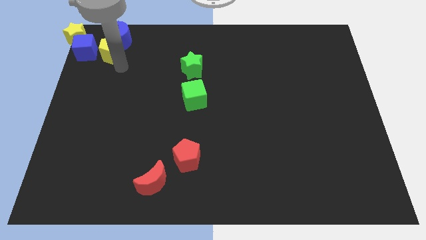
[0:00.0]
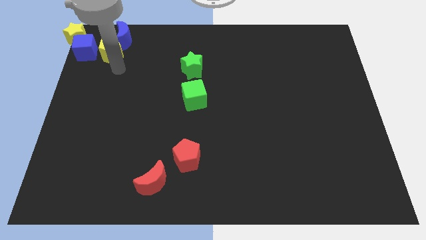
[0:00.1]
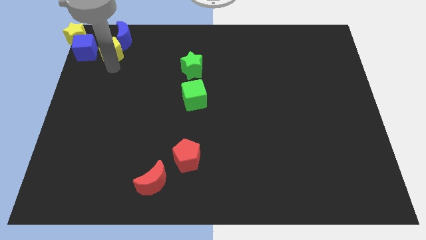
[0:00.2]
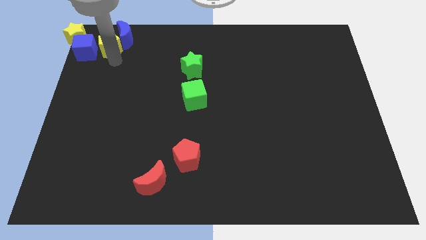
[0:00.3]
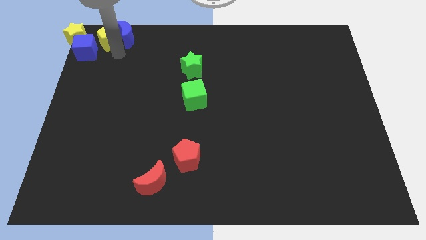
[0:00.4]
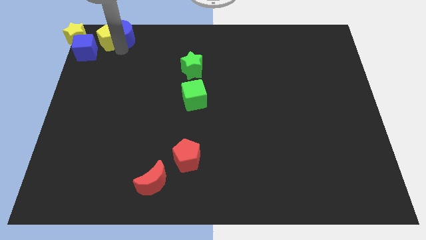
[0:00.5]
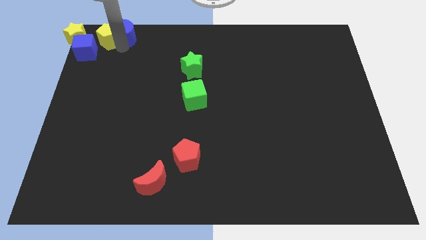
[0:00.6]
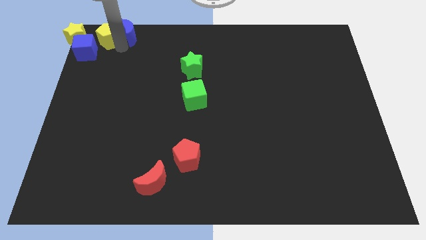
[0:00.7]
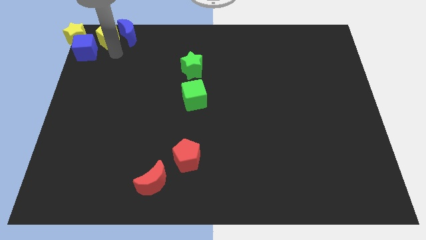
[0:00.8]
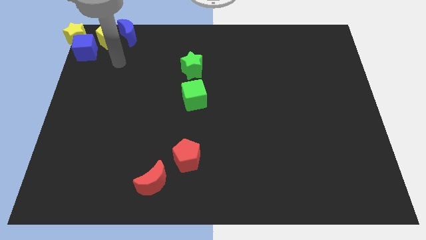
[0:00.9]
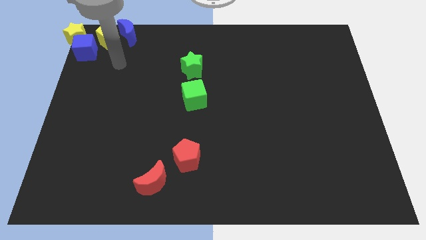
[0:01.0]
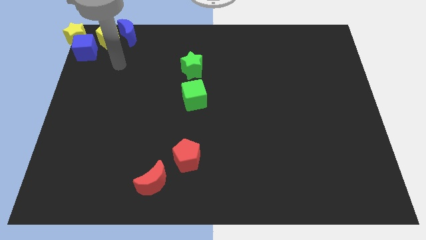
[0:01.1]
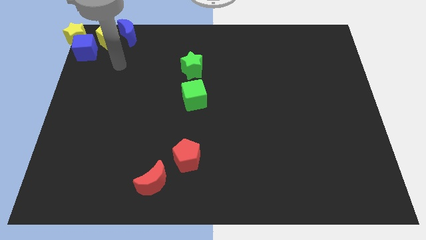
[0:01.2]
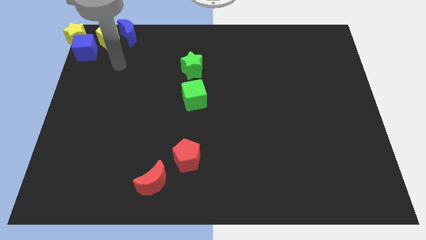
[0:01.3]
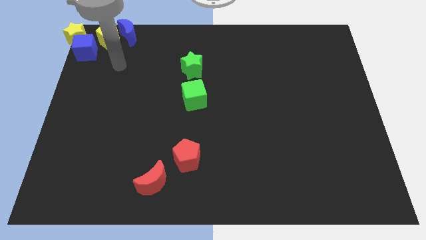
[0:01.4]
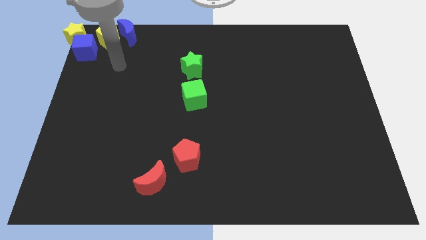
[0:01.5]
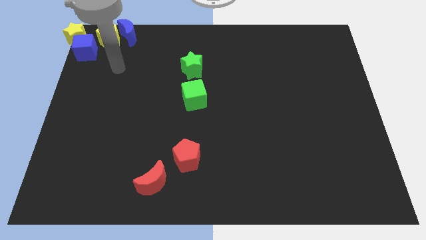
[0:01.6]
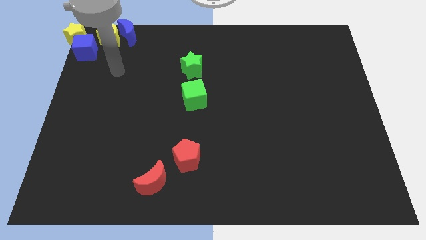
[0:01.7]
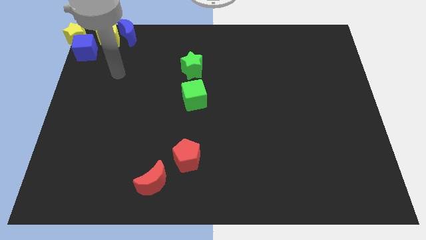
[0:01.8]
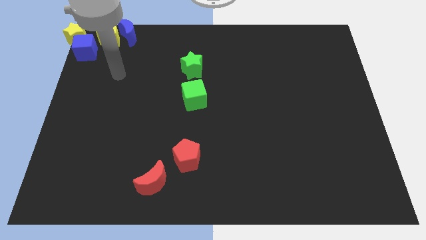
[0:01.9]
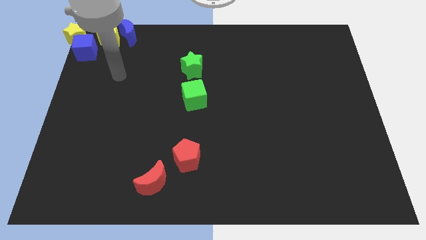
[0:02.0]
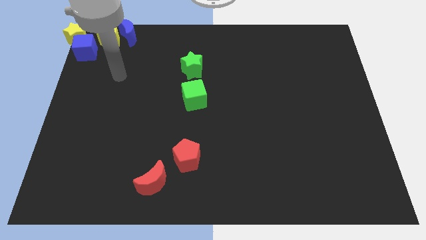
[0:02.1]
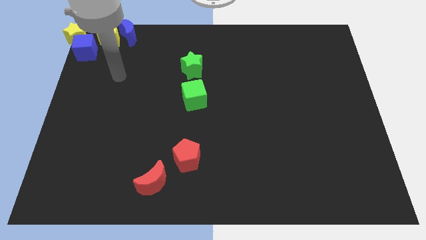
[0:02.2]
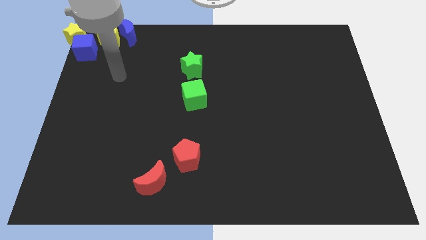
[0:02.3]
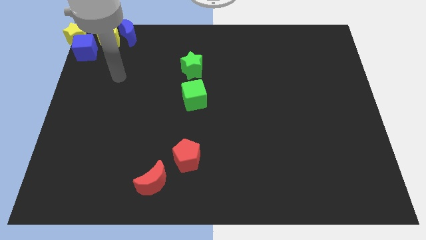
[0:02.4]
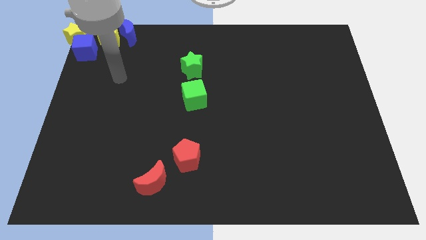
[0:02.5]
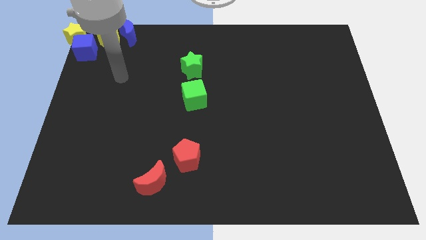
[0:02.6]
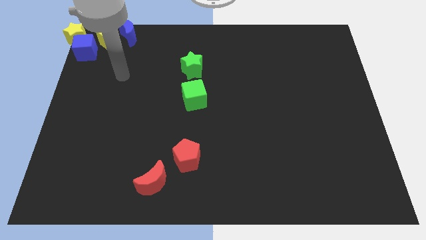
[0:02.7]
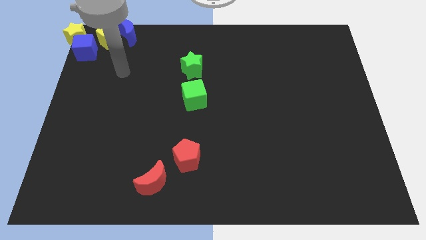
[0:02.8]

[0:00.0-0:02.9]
place yellow pentagon beside yellow star

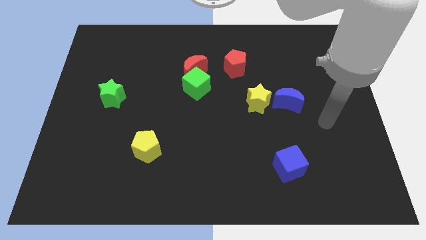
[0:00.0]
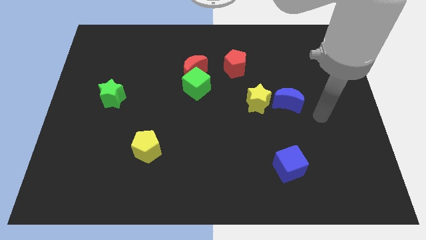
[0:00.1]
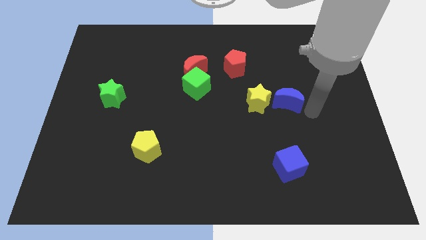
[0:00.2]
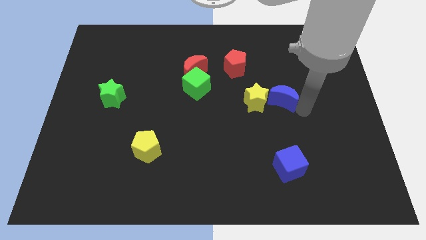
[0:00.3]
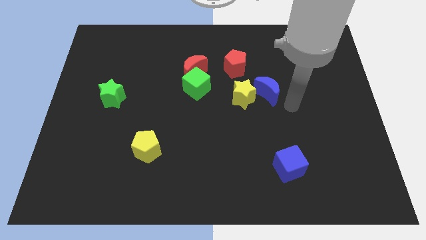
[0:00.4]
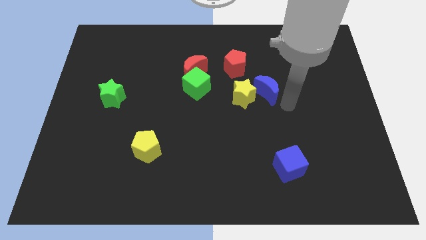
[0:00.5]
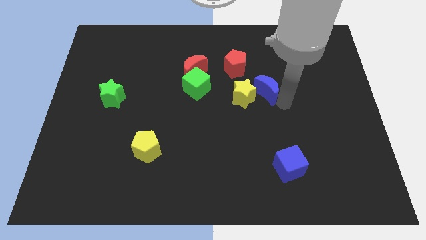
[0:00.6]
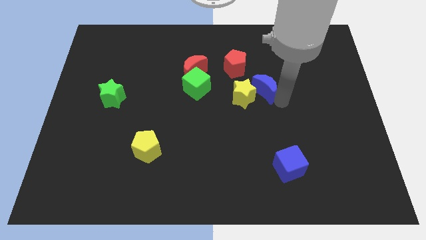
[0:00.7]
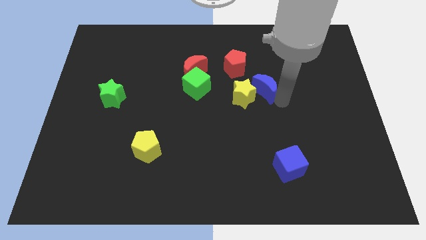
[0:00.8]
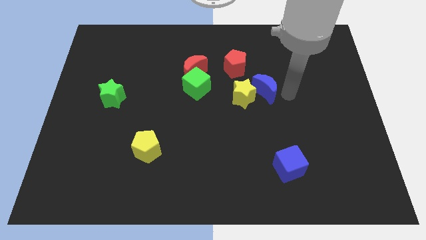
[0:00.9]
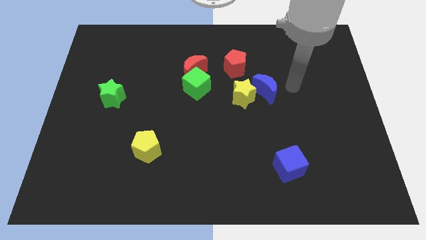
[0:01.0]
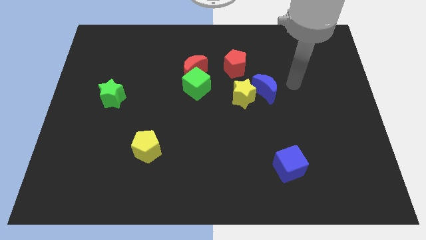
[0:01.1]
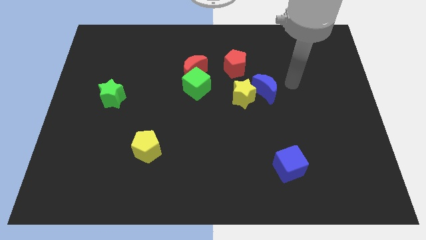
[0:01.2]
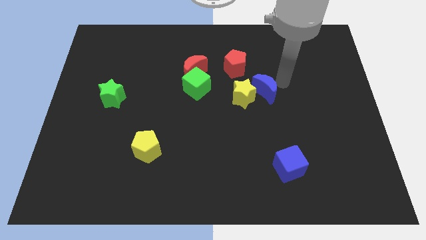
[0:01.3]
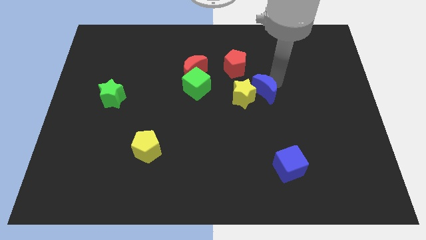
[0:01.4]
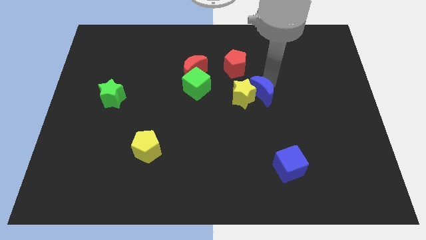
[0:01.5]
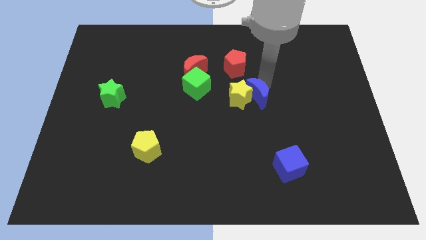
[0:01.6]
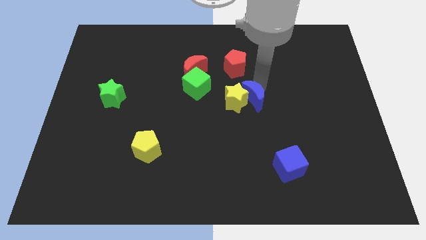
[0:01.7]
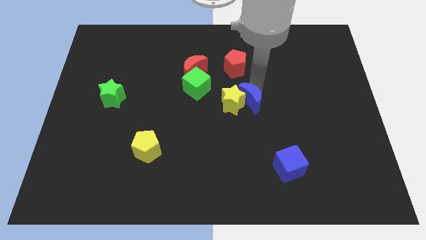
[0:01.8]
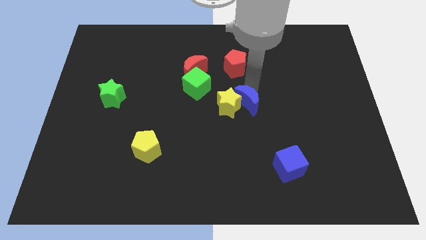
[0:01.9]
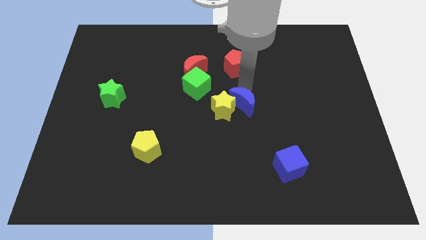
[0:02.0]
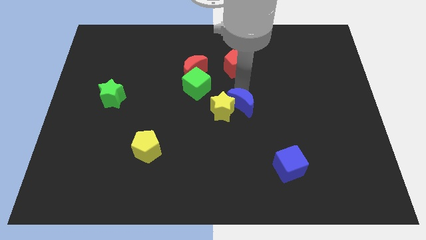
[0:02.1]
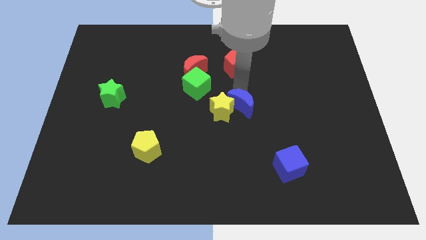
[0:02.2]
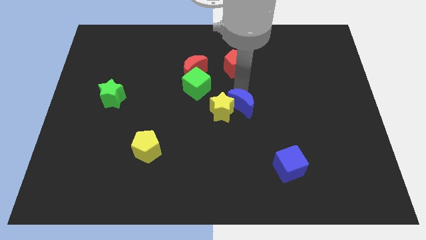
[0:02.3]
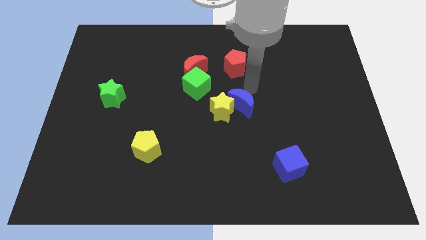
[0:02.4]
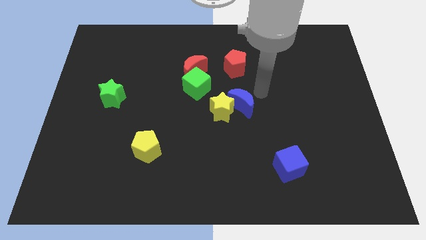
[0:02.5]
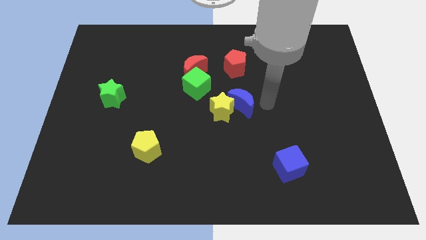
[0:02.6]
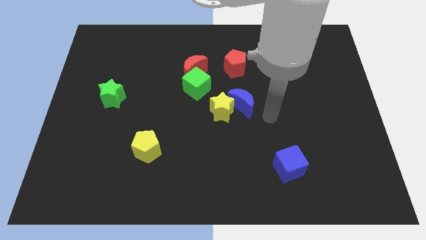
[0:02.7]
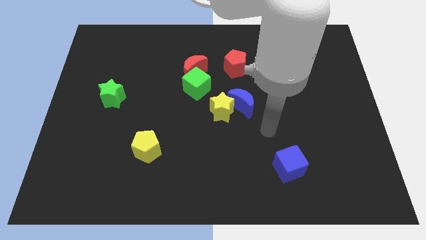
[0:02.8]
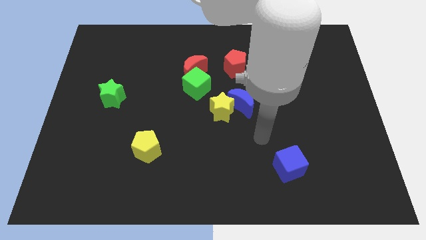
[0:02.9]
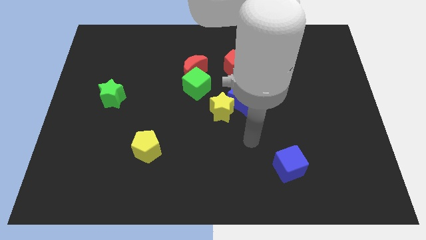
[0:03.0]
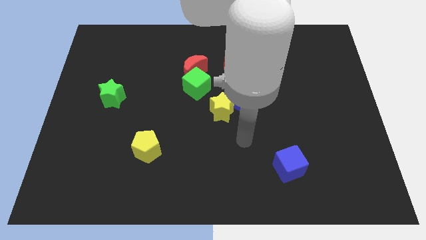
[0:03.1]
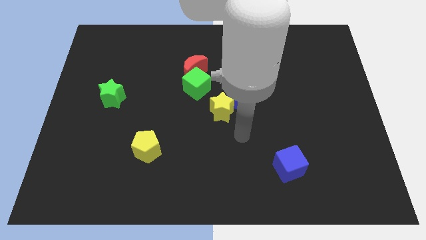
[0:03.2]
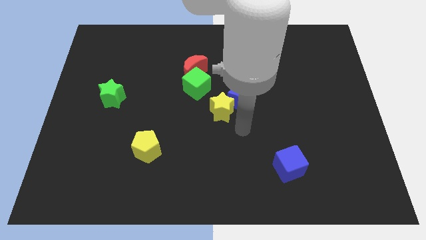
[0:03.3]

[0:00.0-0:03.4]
push the blue moon into the yellow star

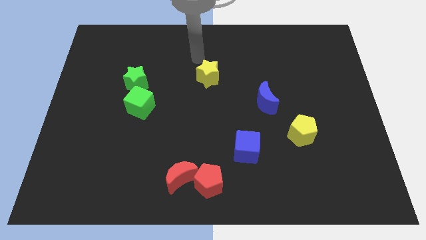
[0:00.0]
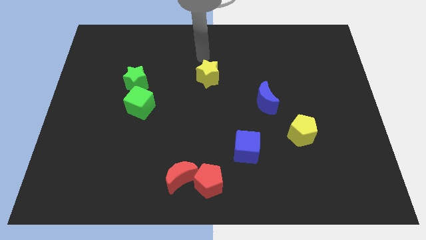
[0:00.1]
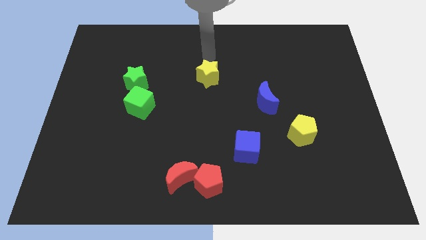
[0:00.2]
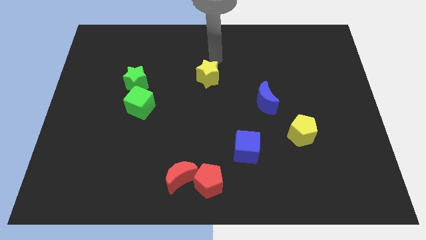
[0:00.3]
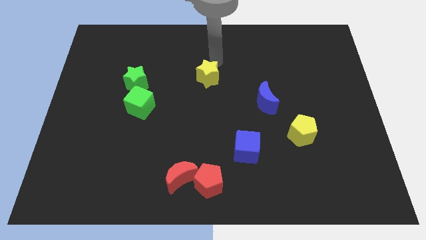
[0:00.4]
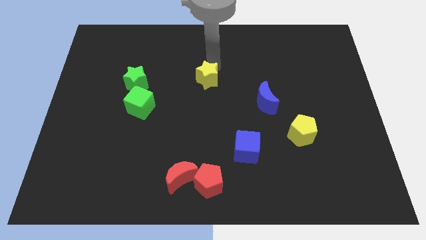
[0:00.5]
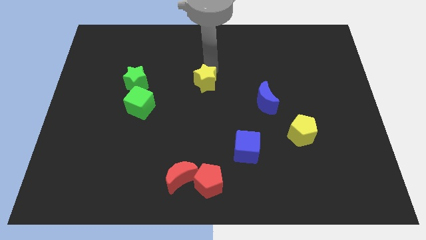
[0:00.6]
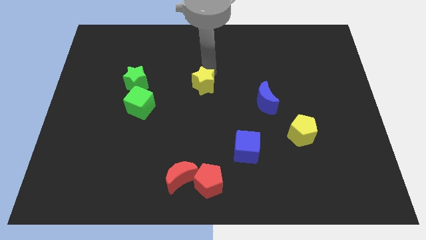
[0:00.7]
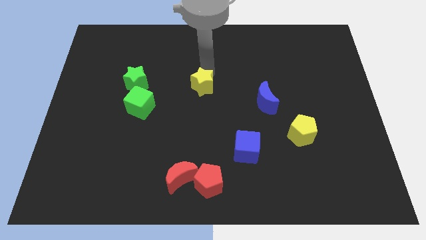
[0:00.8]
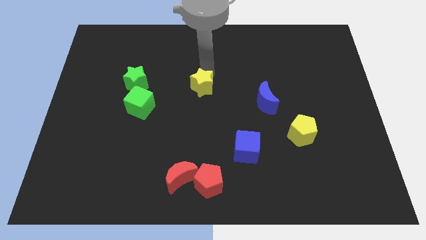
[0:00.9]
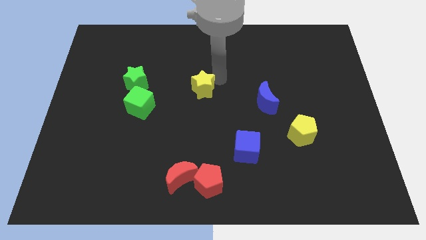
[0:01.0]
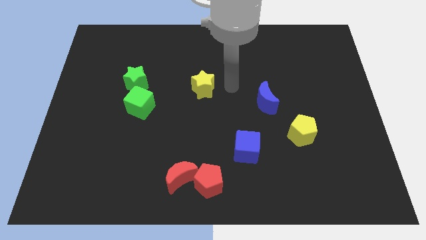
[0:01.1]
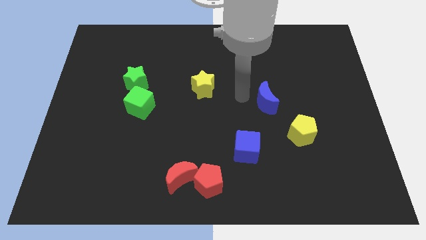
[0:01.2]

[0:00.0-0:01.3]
push the yellow star slightly to the bottom

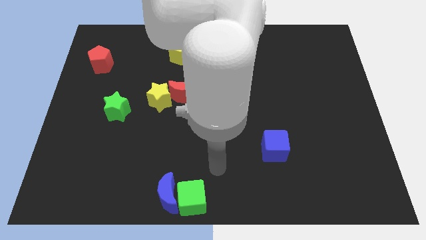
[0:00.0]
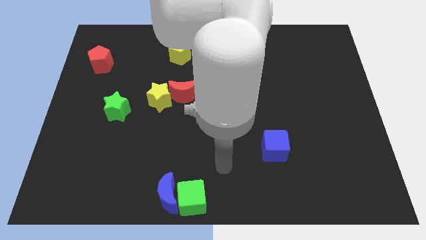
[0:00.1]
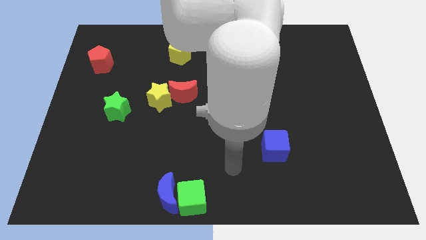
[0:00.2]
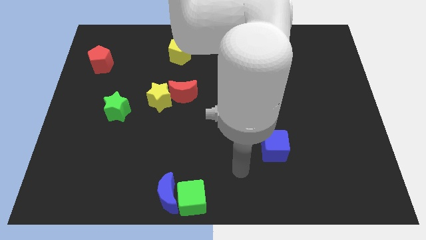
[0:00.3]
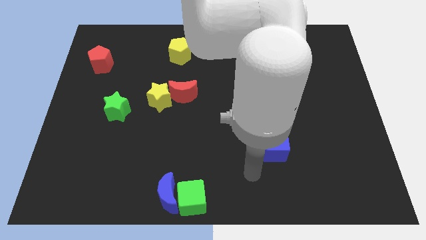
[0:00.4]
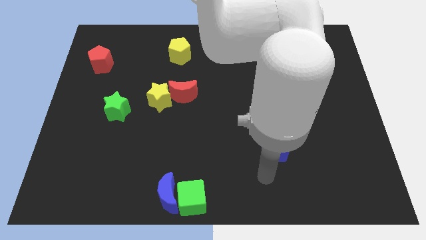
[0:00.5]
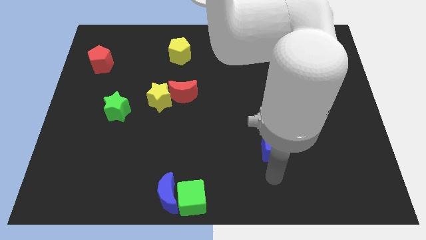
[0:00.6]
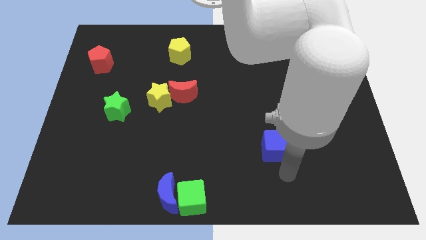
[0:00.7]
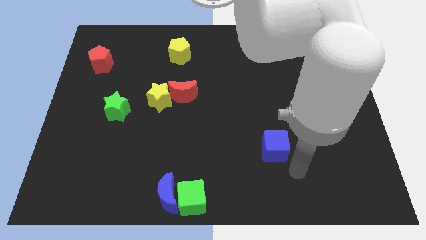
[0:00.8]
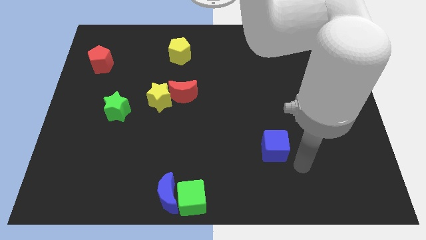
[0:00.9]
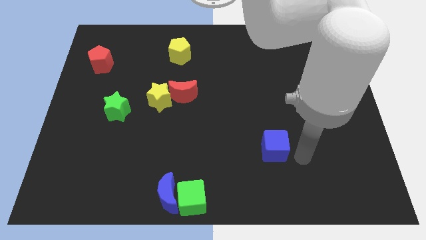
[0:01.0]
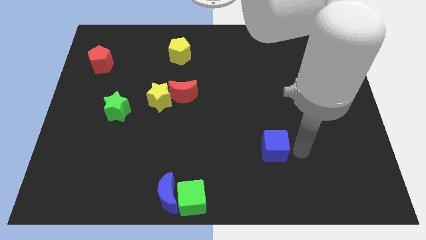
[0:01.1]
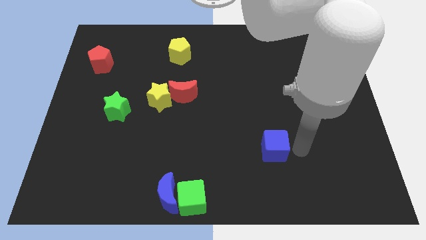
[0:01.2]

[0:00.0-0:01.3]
point your arm at the right side of the blue cube
